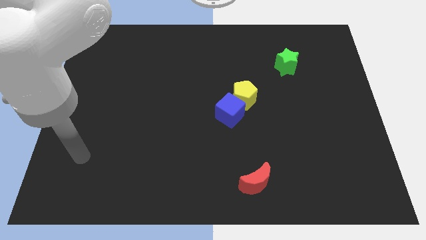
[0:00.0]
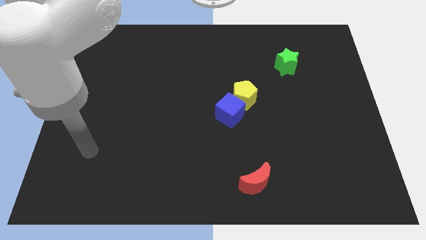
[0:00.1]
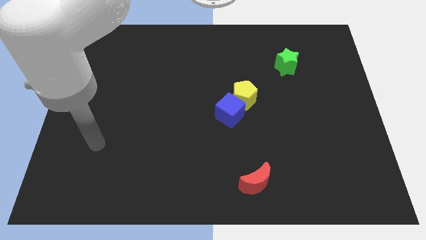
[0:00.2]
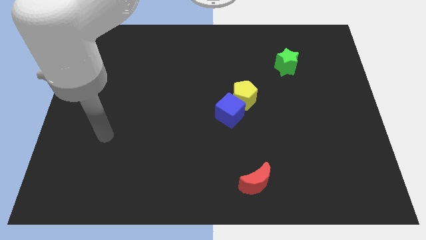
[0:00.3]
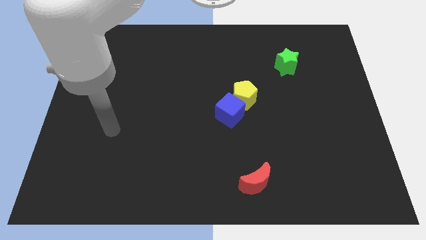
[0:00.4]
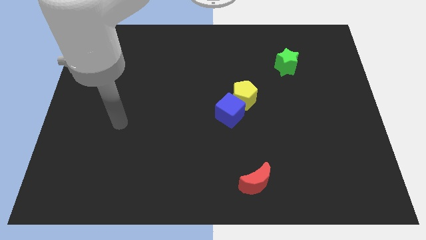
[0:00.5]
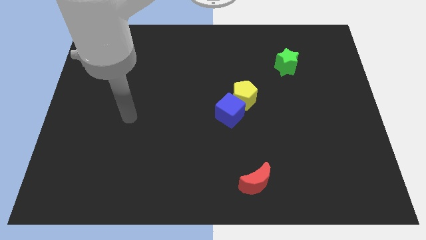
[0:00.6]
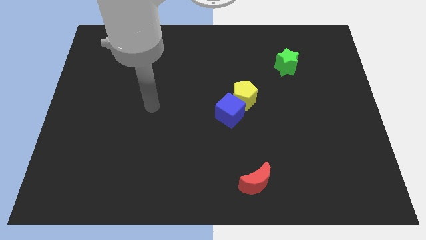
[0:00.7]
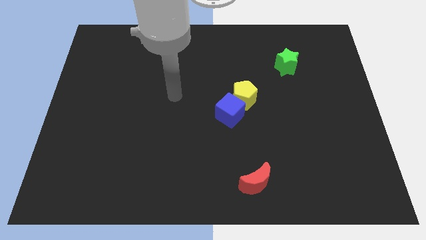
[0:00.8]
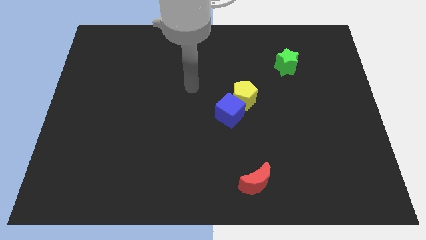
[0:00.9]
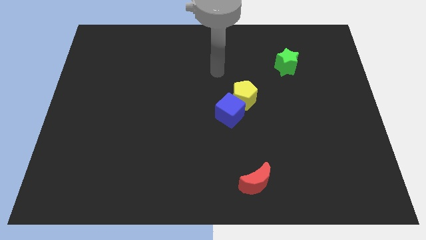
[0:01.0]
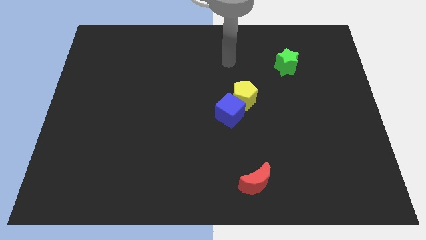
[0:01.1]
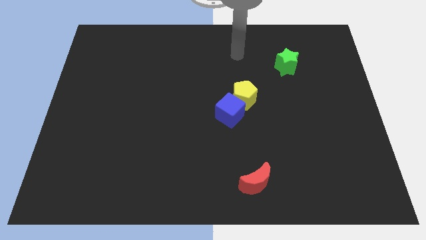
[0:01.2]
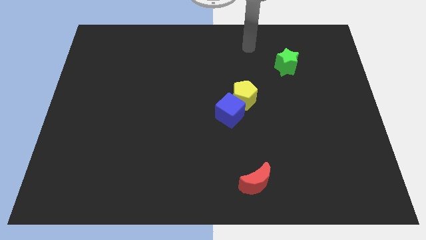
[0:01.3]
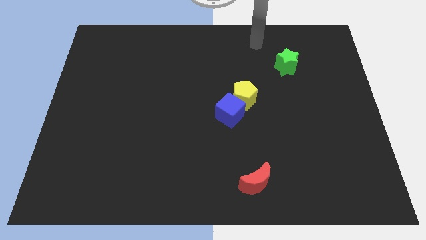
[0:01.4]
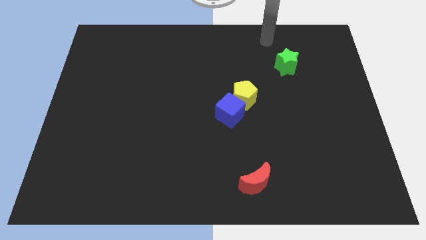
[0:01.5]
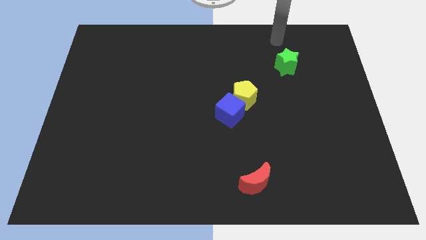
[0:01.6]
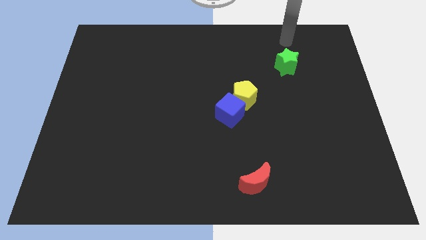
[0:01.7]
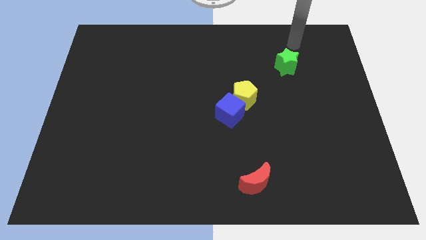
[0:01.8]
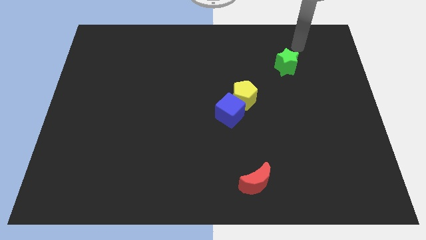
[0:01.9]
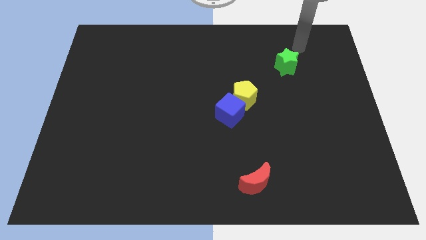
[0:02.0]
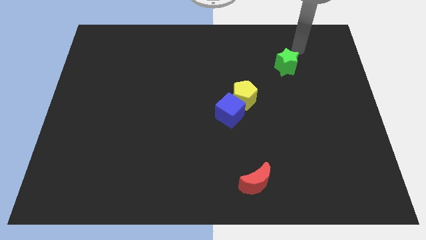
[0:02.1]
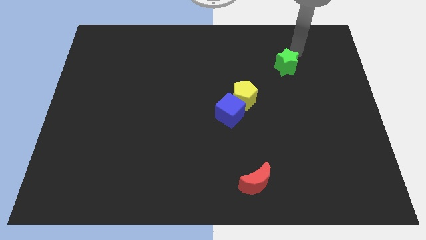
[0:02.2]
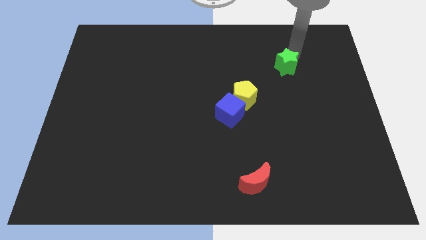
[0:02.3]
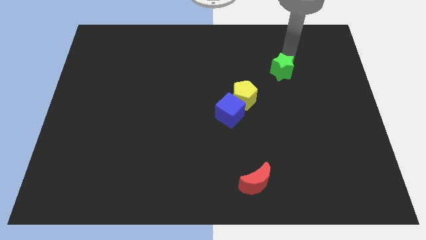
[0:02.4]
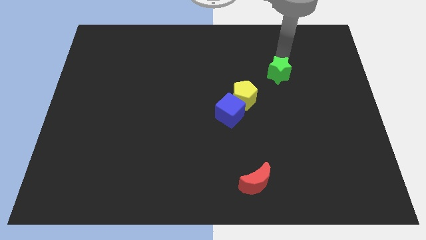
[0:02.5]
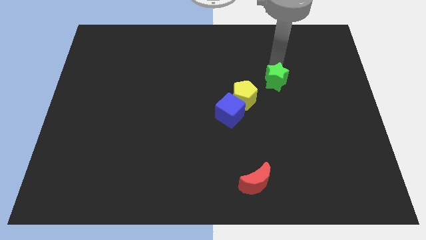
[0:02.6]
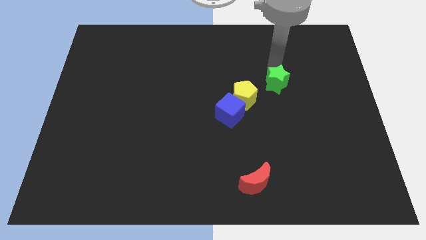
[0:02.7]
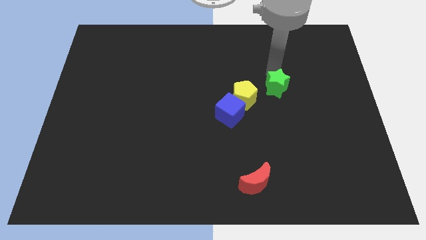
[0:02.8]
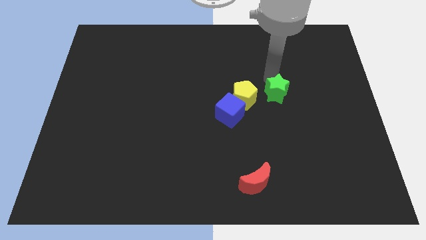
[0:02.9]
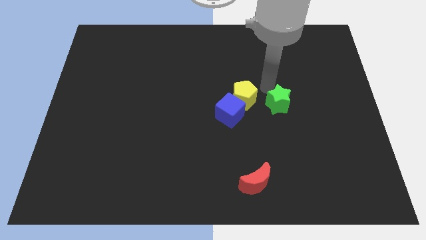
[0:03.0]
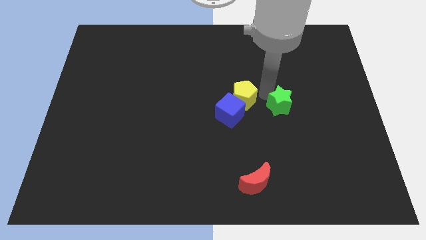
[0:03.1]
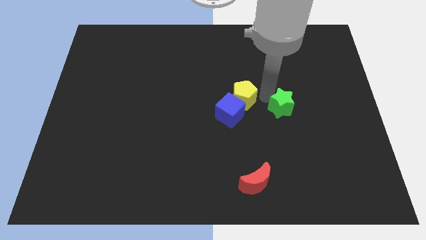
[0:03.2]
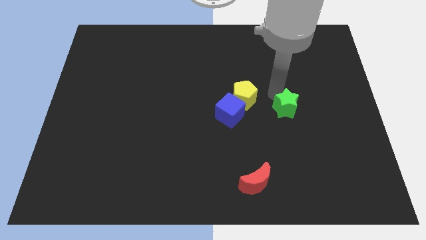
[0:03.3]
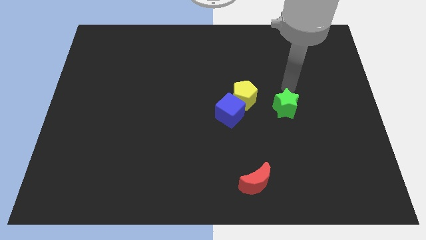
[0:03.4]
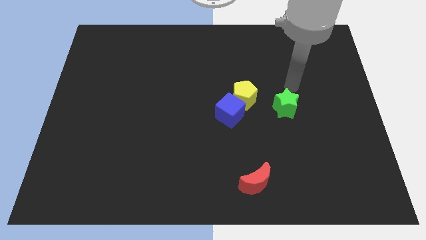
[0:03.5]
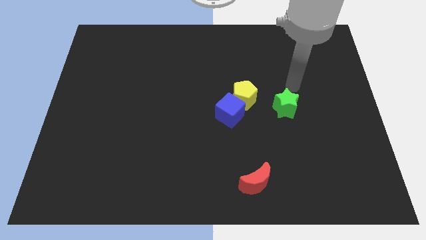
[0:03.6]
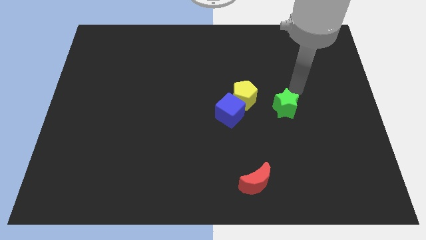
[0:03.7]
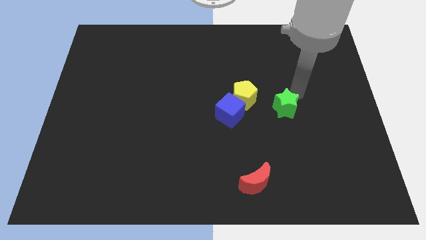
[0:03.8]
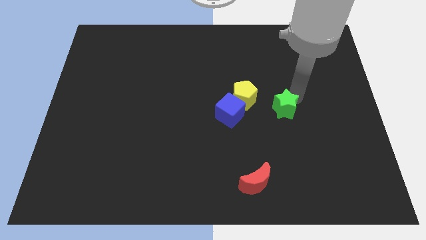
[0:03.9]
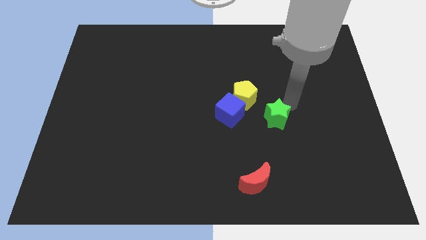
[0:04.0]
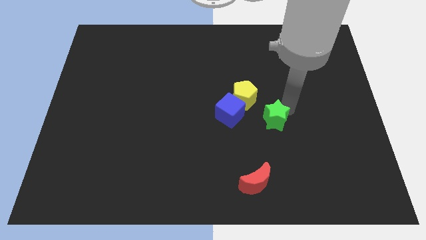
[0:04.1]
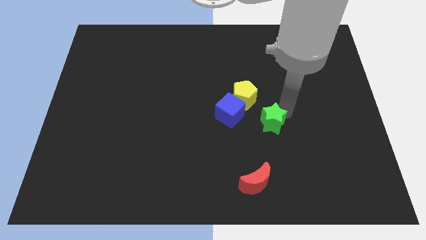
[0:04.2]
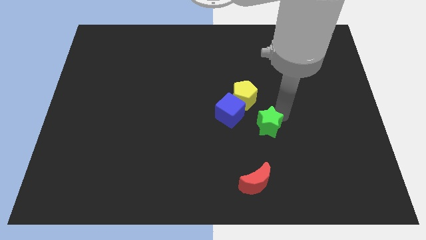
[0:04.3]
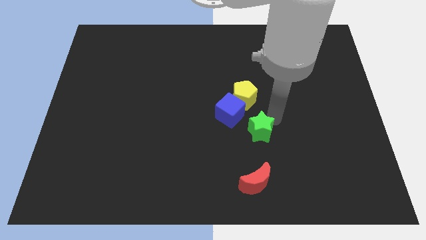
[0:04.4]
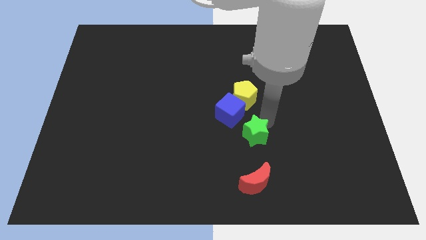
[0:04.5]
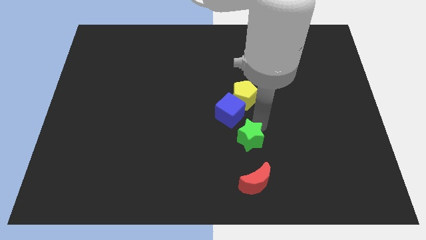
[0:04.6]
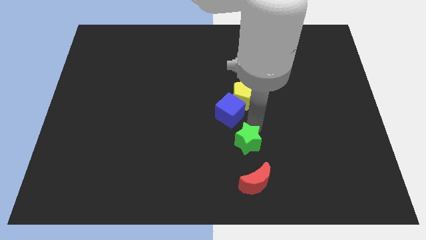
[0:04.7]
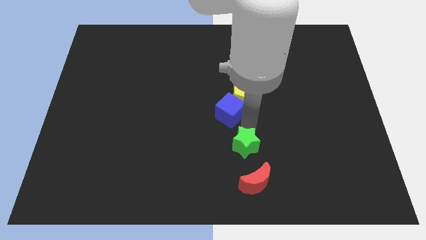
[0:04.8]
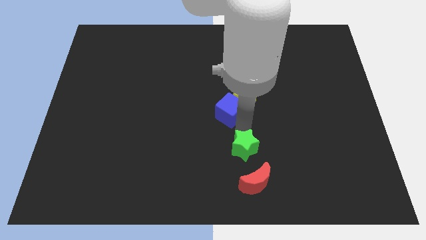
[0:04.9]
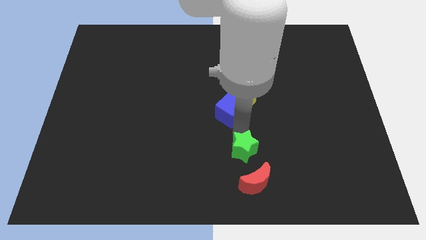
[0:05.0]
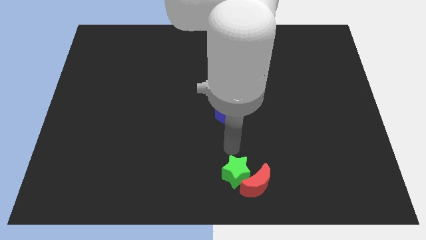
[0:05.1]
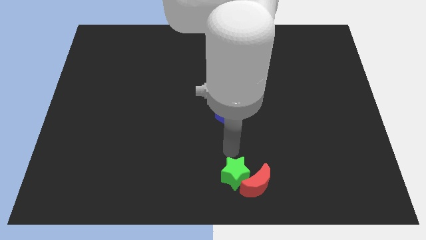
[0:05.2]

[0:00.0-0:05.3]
push the green star to the red moon

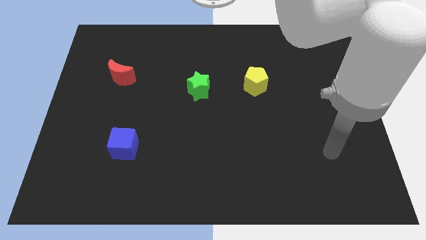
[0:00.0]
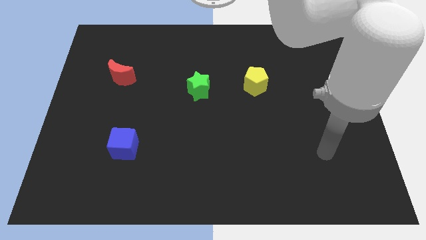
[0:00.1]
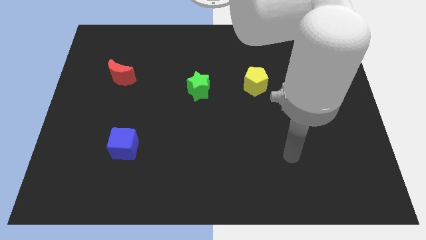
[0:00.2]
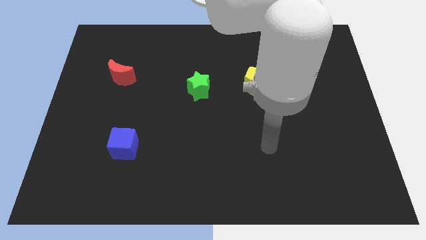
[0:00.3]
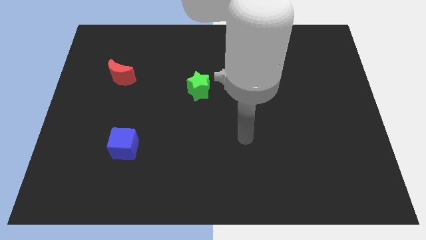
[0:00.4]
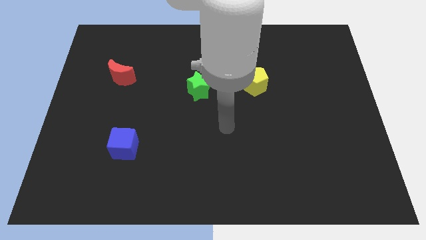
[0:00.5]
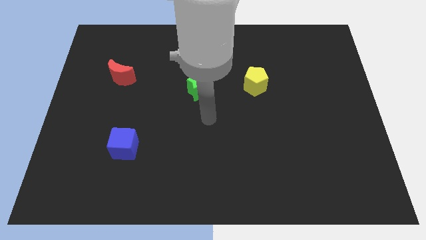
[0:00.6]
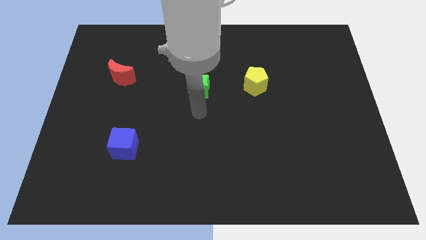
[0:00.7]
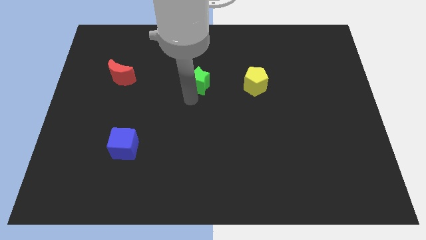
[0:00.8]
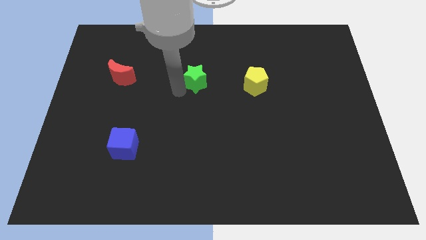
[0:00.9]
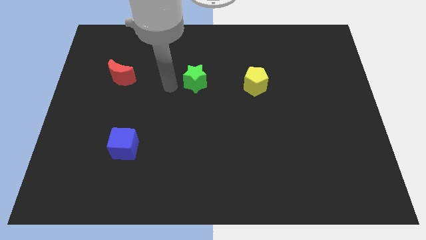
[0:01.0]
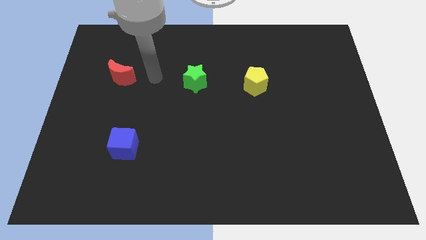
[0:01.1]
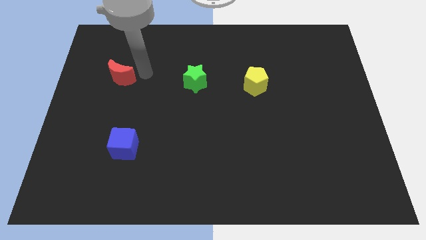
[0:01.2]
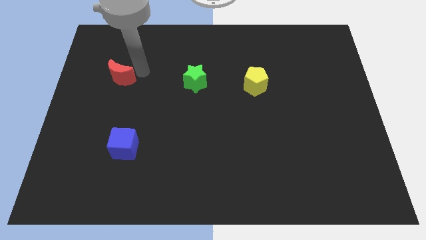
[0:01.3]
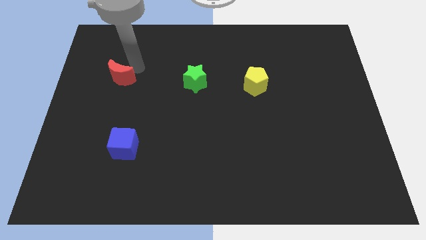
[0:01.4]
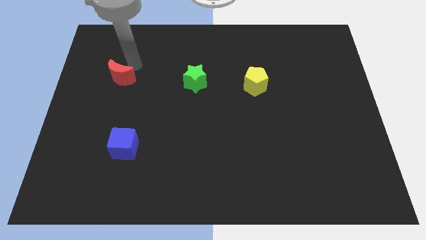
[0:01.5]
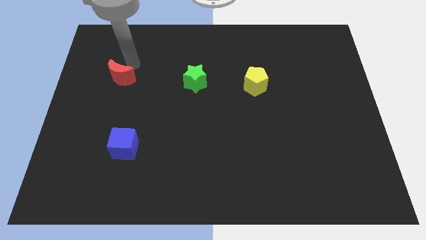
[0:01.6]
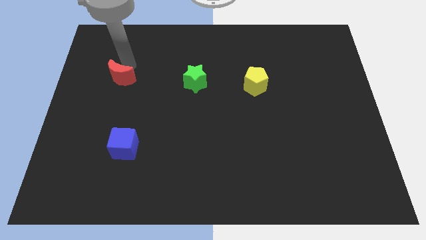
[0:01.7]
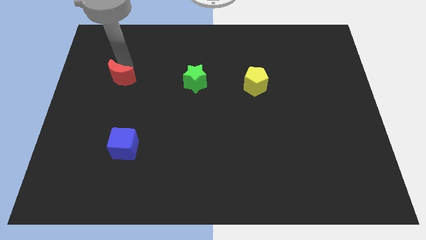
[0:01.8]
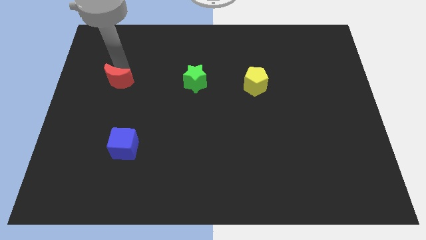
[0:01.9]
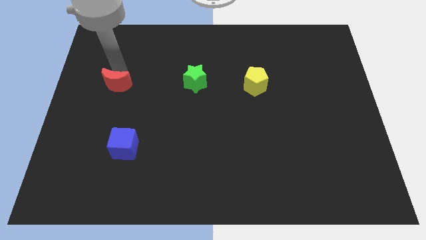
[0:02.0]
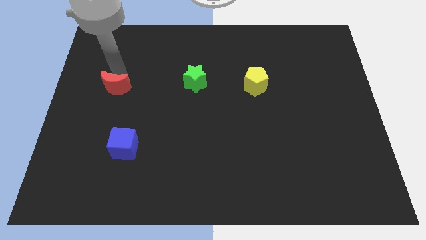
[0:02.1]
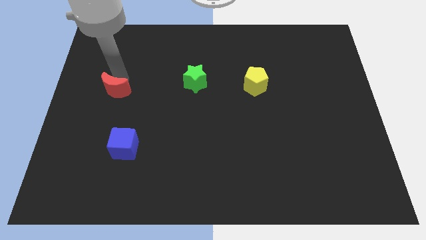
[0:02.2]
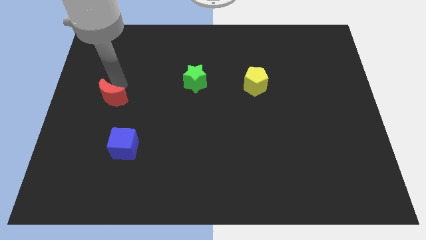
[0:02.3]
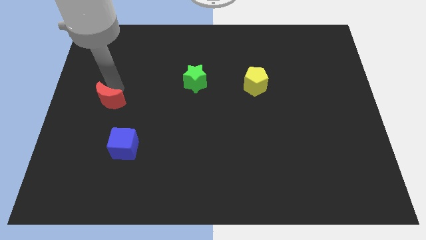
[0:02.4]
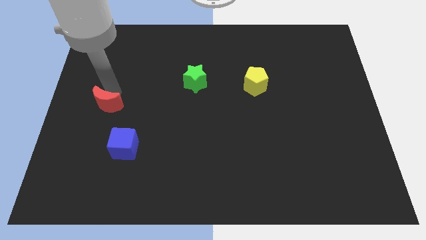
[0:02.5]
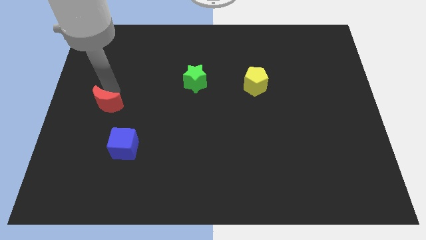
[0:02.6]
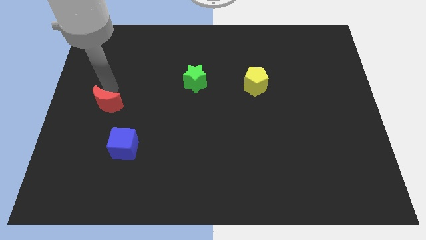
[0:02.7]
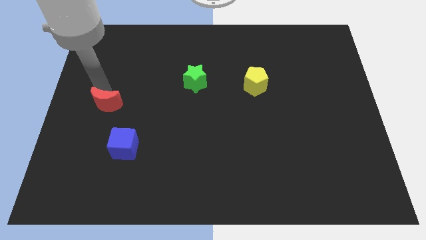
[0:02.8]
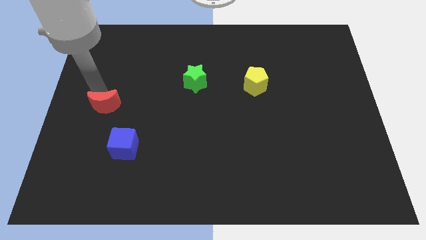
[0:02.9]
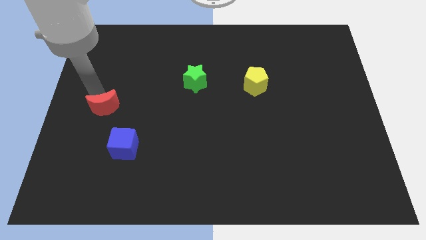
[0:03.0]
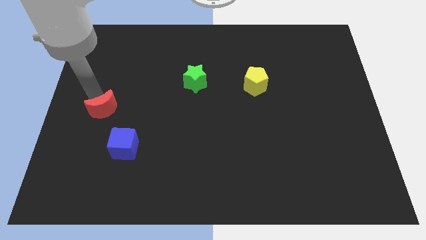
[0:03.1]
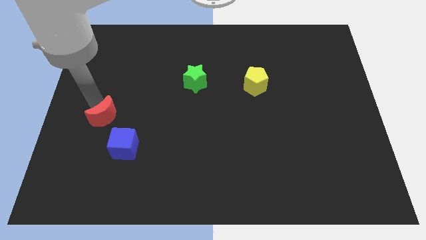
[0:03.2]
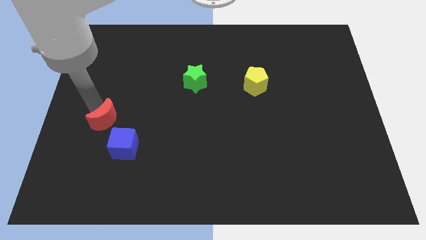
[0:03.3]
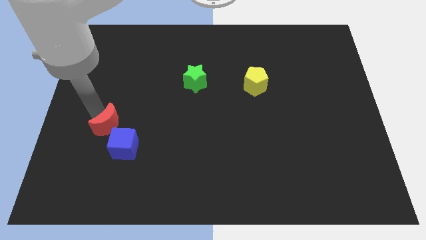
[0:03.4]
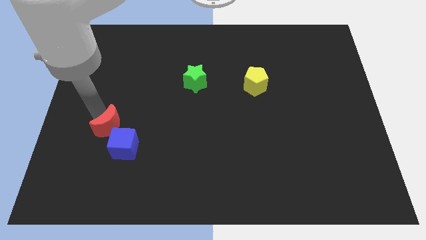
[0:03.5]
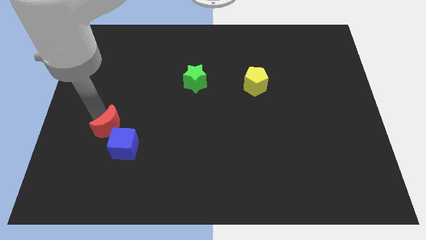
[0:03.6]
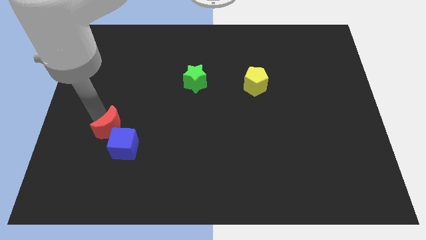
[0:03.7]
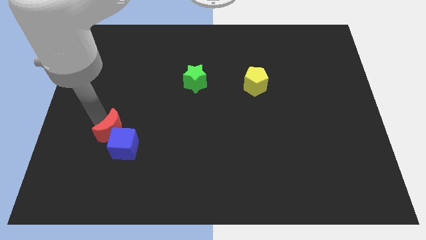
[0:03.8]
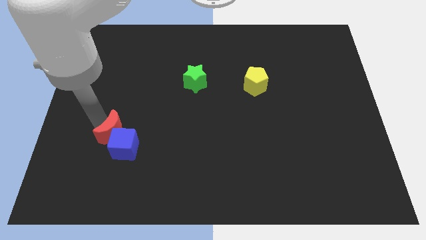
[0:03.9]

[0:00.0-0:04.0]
push the red moon close to the cube
